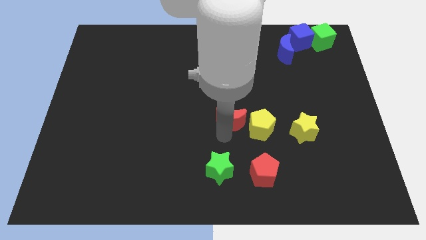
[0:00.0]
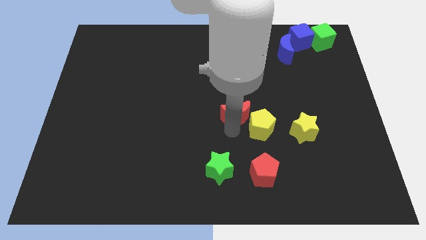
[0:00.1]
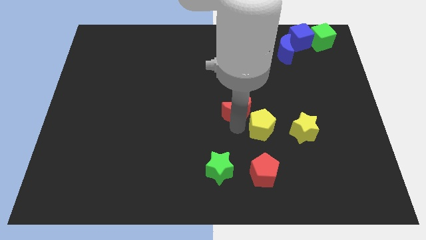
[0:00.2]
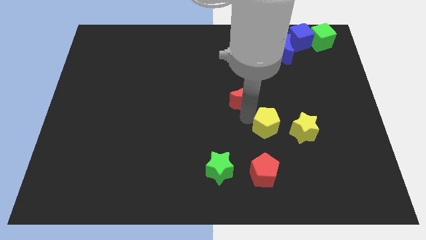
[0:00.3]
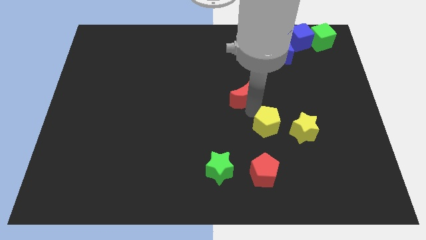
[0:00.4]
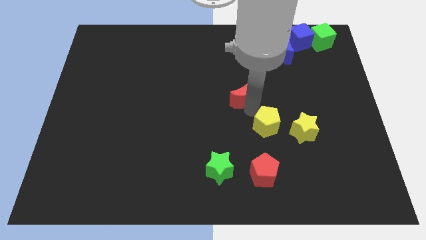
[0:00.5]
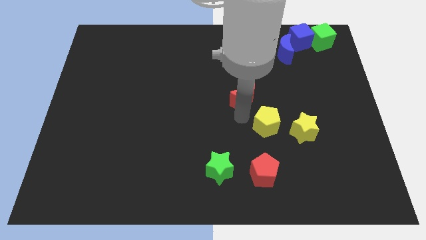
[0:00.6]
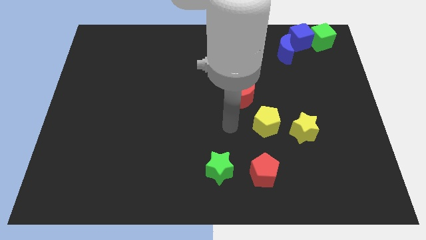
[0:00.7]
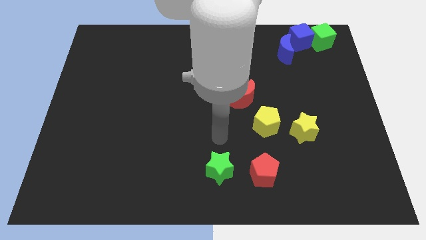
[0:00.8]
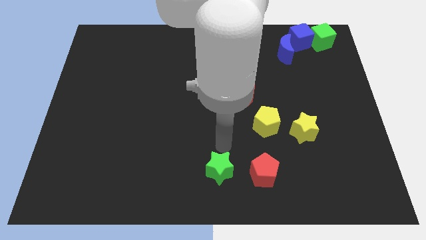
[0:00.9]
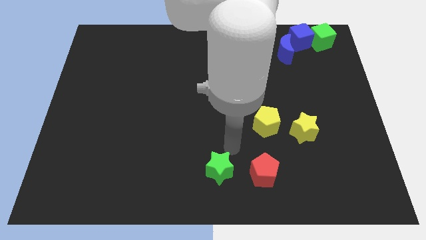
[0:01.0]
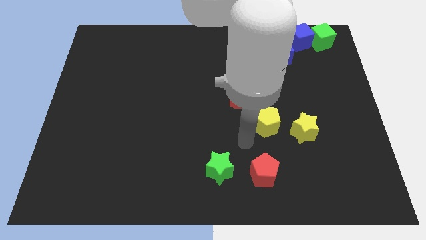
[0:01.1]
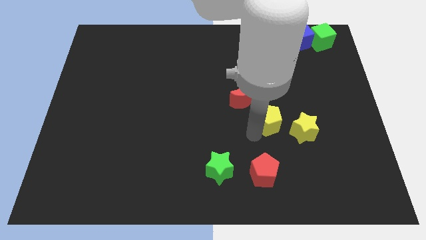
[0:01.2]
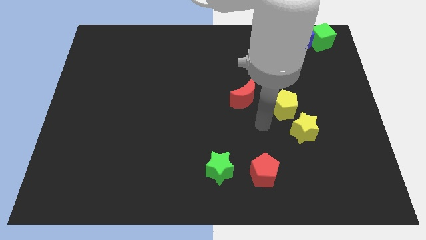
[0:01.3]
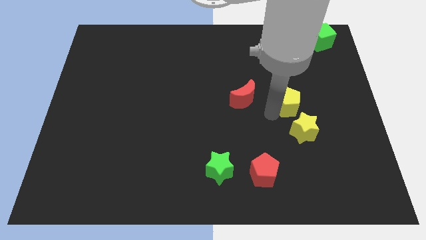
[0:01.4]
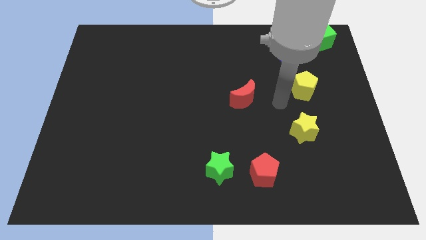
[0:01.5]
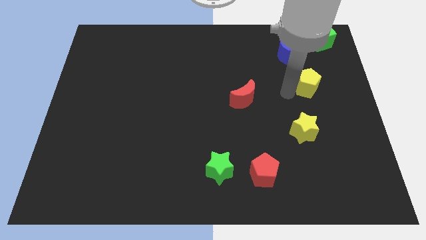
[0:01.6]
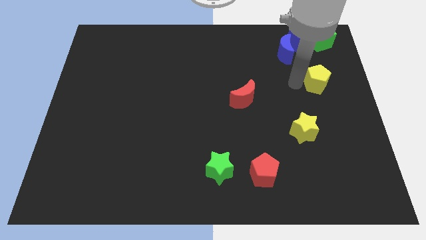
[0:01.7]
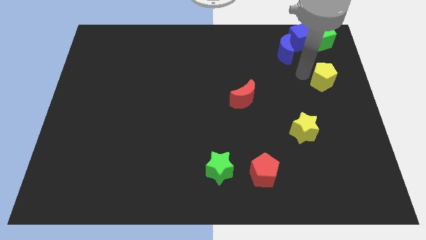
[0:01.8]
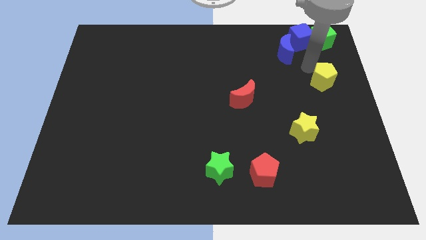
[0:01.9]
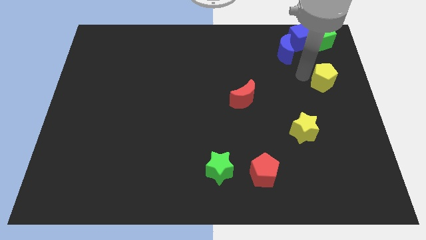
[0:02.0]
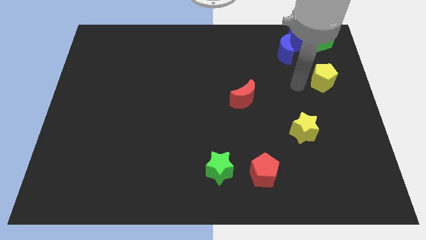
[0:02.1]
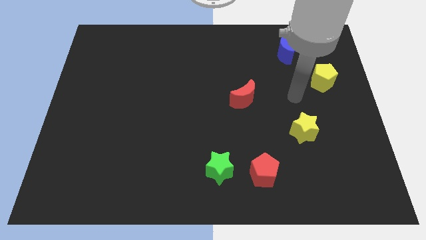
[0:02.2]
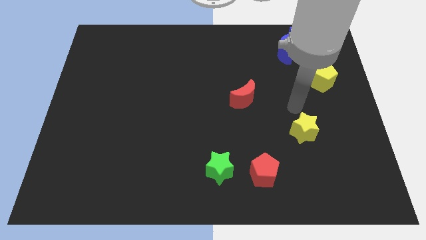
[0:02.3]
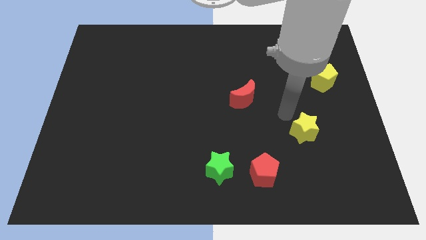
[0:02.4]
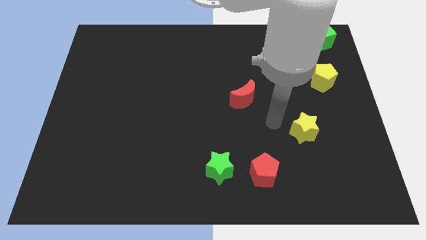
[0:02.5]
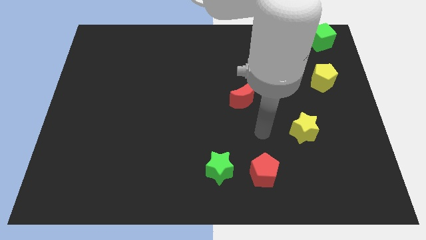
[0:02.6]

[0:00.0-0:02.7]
place the yellow pentagon vertically below the green cube

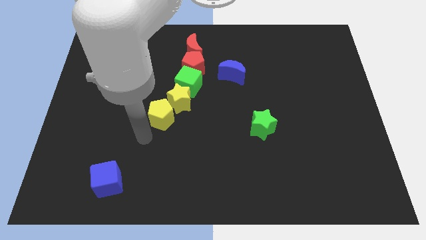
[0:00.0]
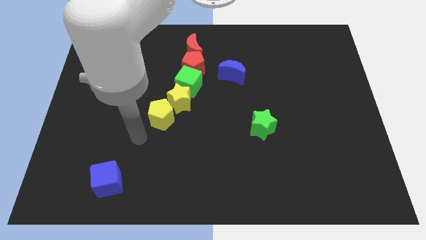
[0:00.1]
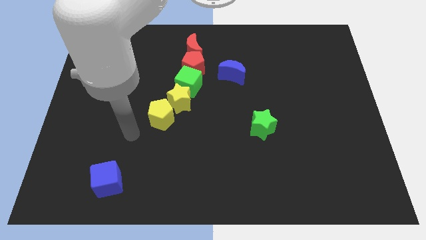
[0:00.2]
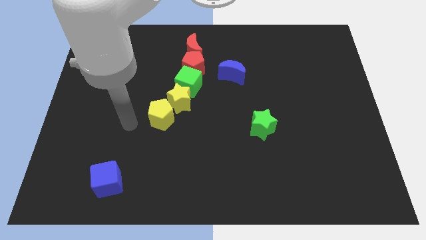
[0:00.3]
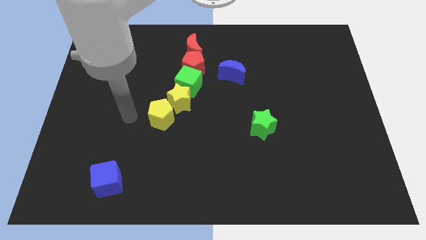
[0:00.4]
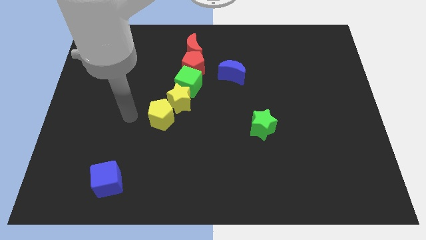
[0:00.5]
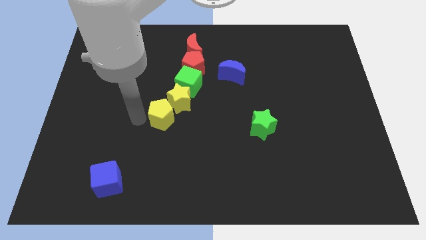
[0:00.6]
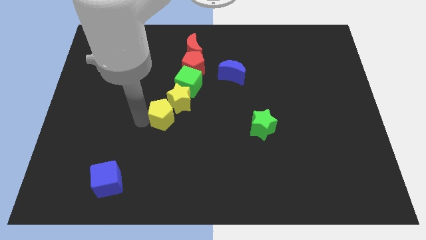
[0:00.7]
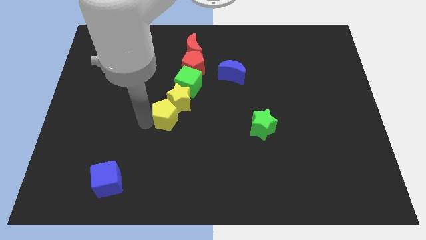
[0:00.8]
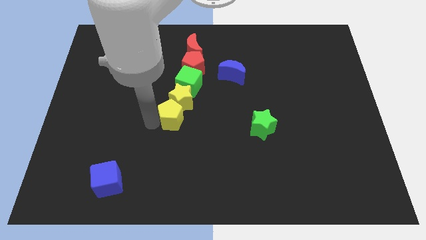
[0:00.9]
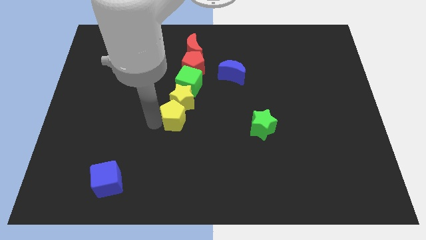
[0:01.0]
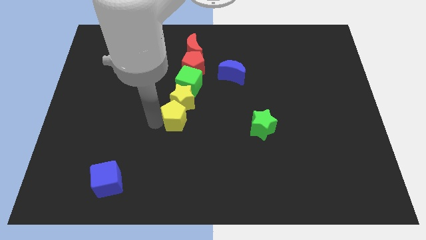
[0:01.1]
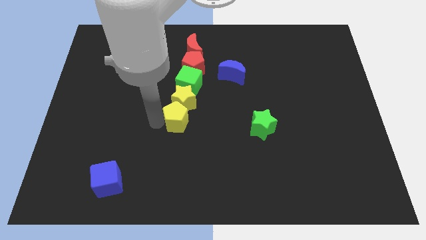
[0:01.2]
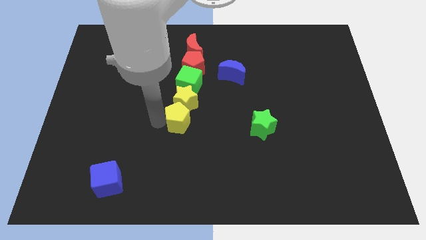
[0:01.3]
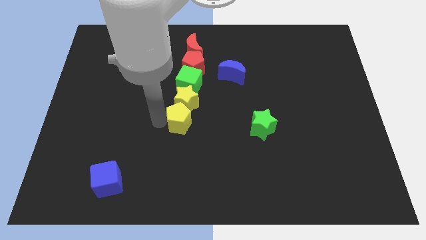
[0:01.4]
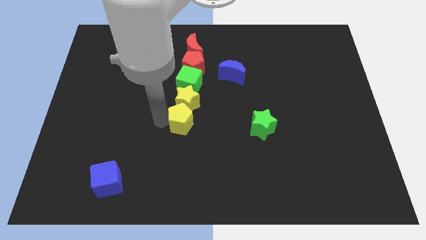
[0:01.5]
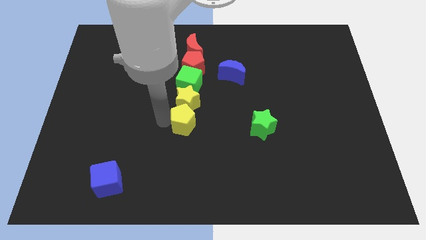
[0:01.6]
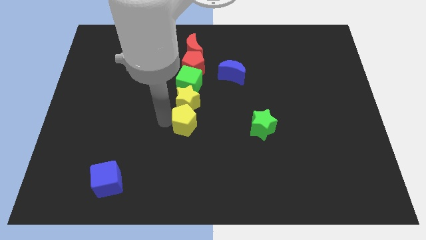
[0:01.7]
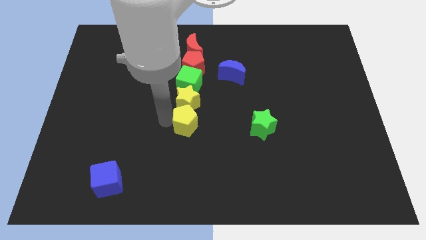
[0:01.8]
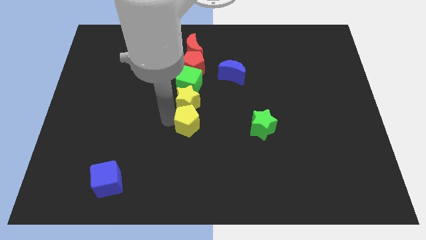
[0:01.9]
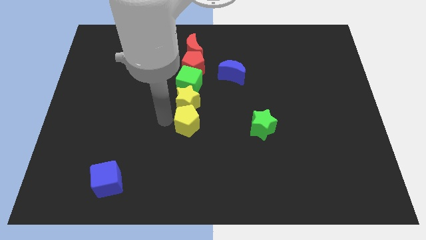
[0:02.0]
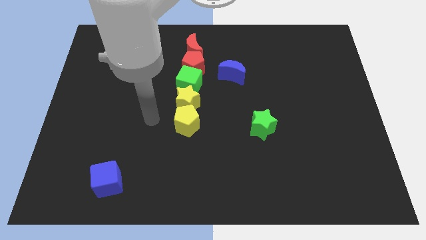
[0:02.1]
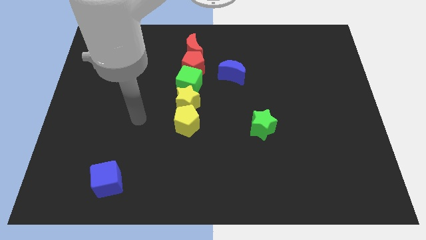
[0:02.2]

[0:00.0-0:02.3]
adjust the yellow blocks vertical below green cube

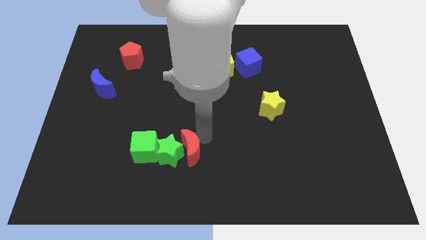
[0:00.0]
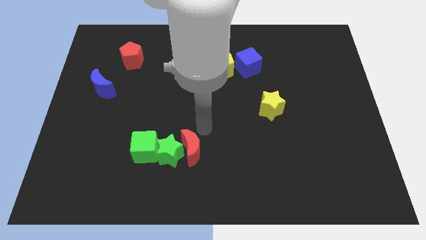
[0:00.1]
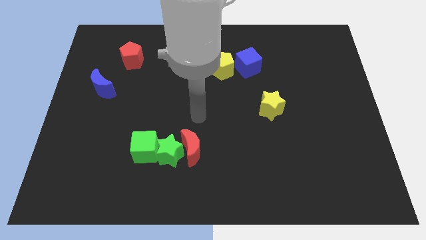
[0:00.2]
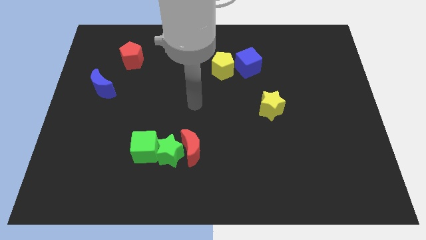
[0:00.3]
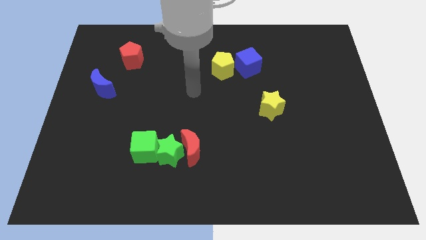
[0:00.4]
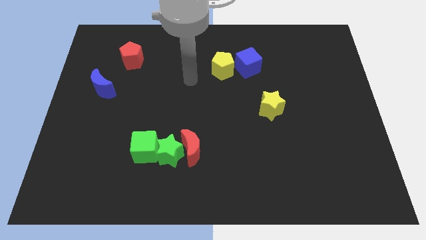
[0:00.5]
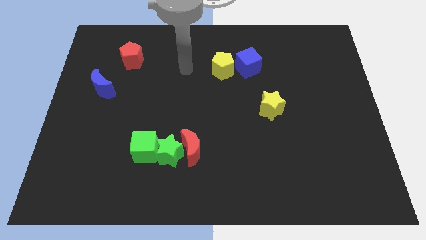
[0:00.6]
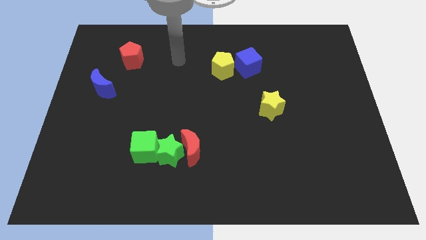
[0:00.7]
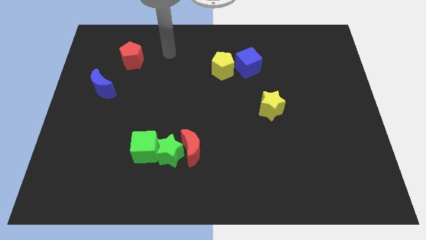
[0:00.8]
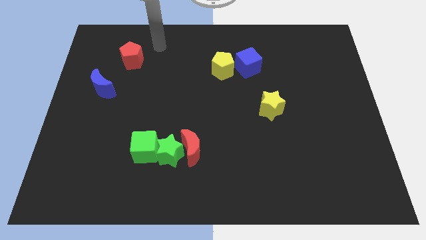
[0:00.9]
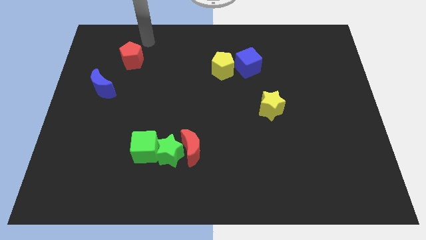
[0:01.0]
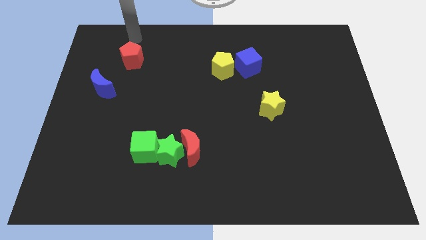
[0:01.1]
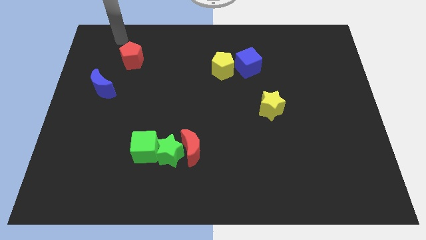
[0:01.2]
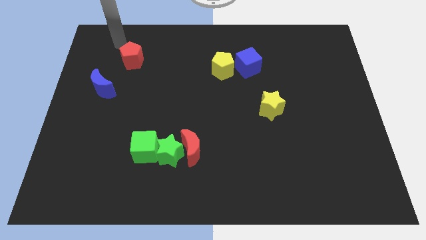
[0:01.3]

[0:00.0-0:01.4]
move your arm towards the red pentagon

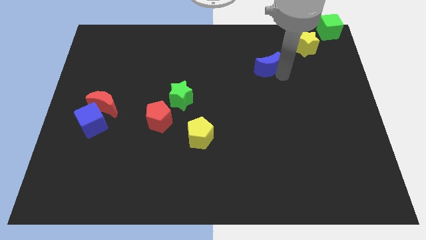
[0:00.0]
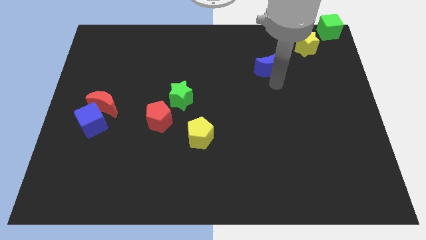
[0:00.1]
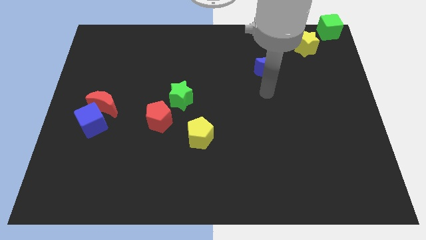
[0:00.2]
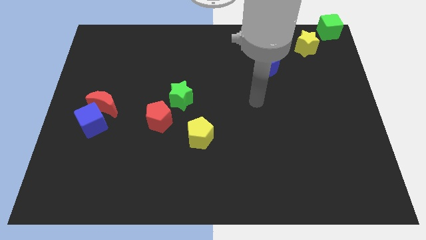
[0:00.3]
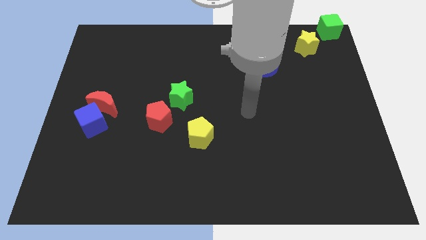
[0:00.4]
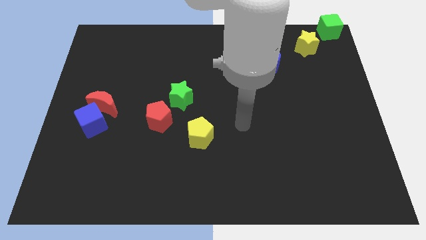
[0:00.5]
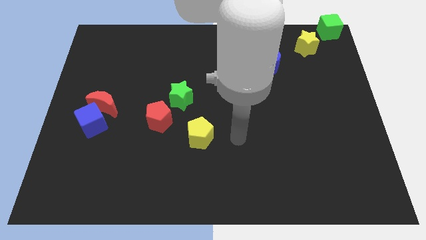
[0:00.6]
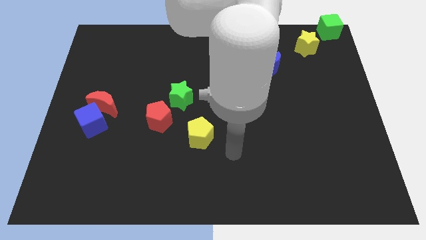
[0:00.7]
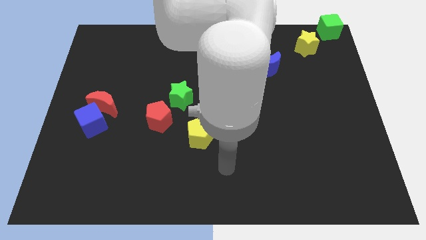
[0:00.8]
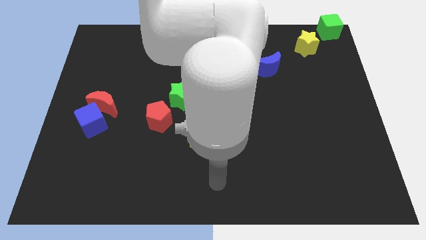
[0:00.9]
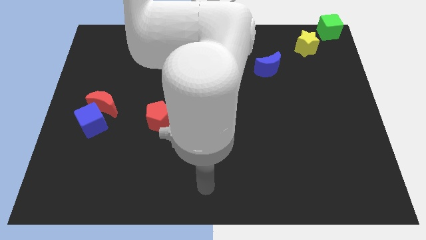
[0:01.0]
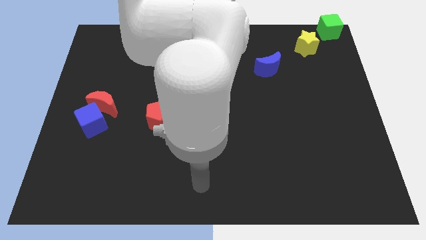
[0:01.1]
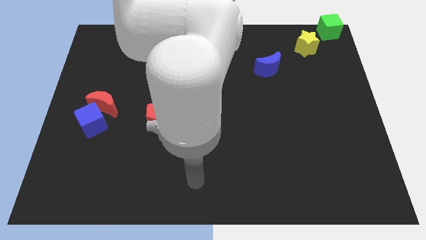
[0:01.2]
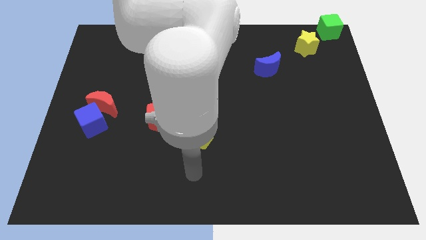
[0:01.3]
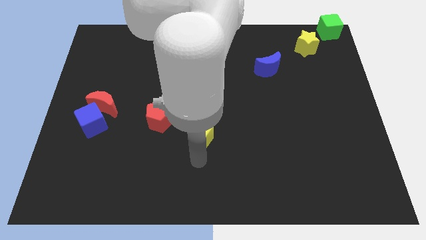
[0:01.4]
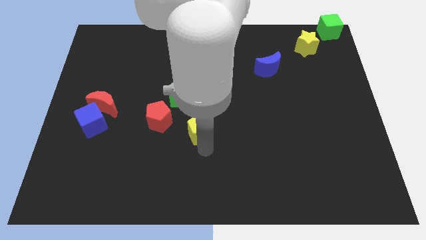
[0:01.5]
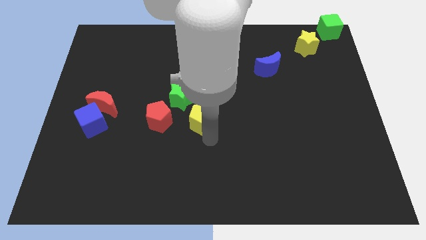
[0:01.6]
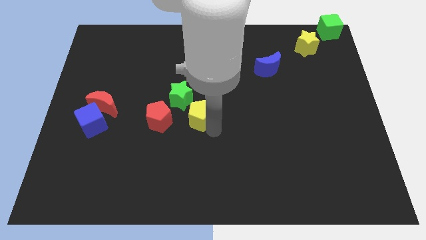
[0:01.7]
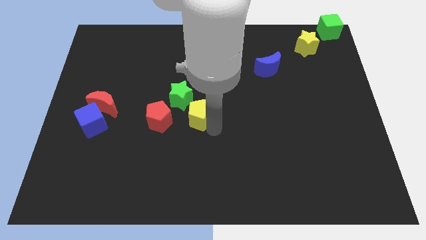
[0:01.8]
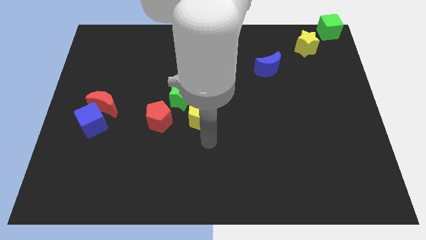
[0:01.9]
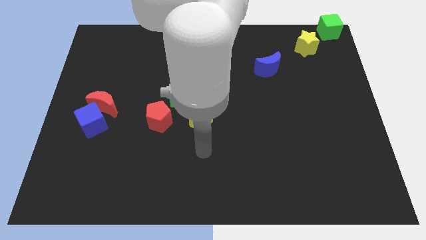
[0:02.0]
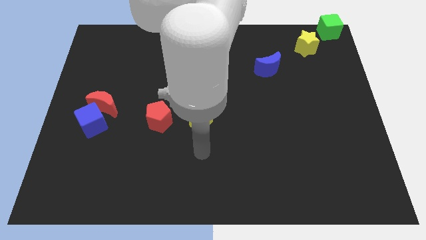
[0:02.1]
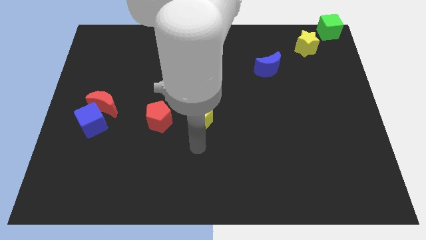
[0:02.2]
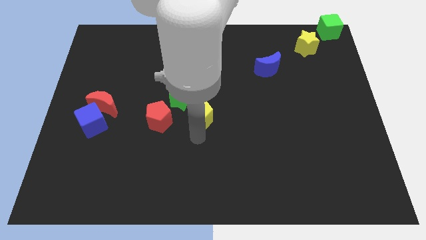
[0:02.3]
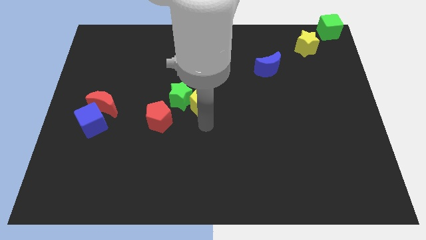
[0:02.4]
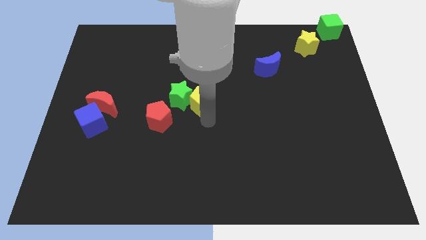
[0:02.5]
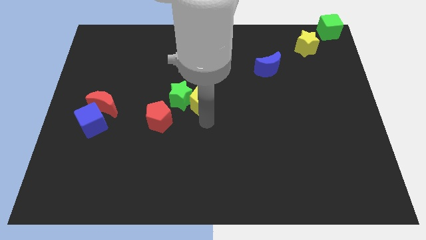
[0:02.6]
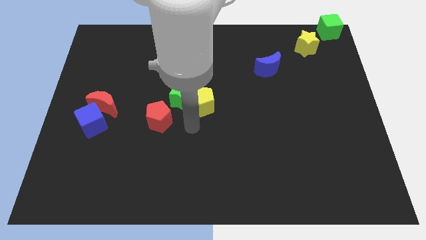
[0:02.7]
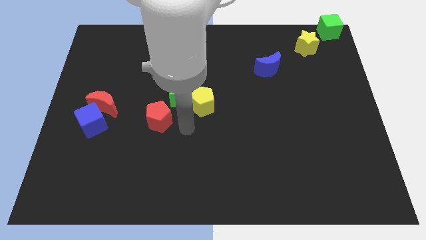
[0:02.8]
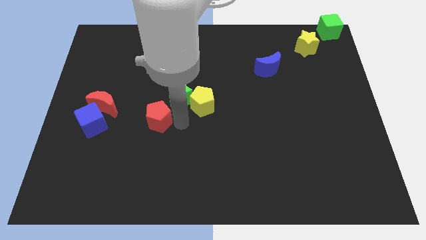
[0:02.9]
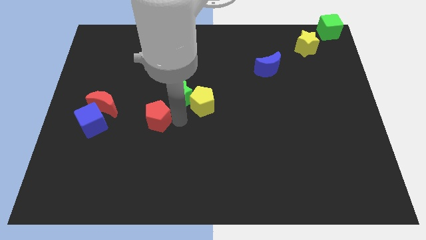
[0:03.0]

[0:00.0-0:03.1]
move the yellow pentagon close to the green star
